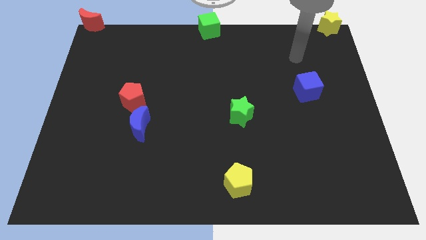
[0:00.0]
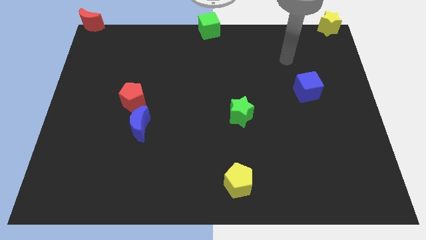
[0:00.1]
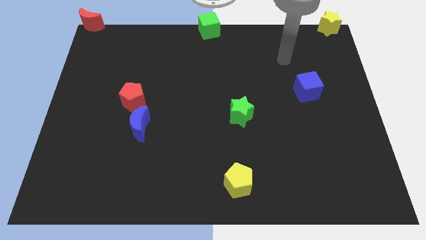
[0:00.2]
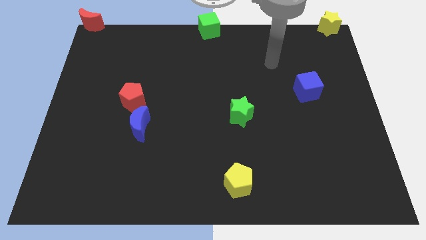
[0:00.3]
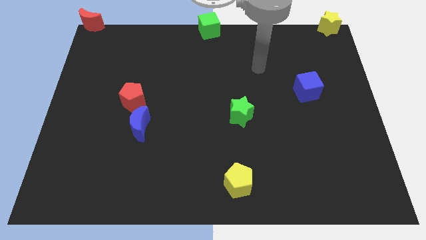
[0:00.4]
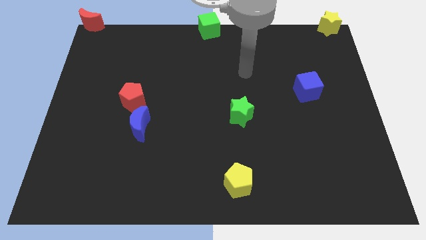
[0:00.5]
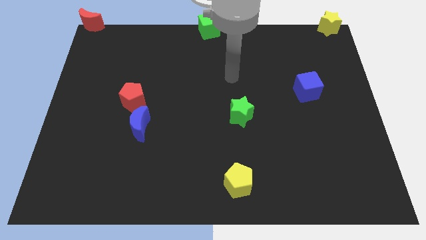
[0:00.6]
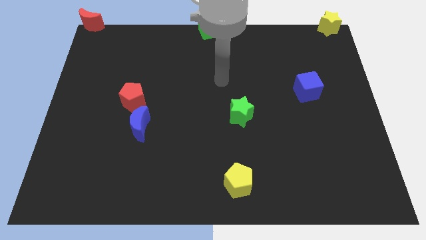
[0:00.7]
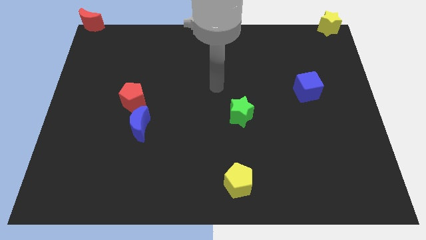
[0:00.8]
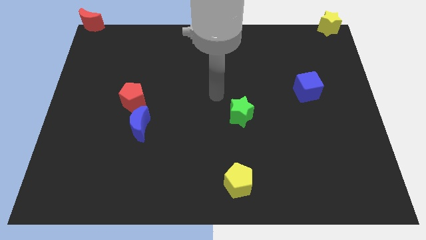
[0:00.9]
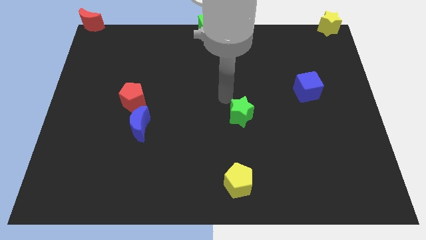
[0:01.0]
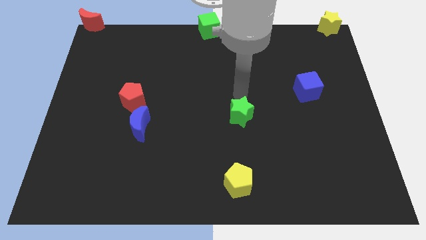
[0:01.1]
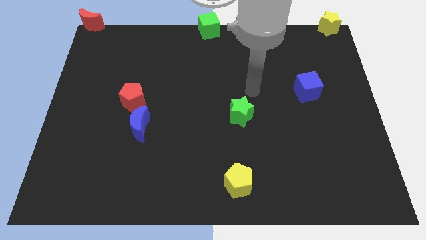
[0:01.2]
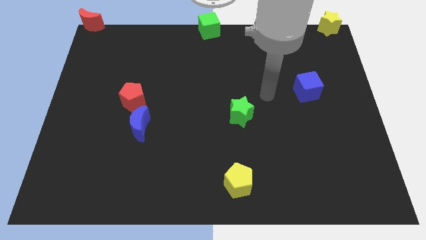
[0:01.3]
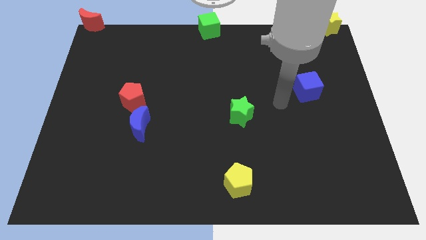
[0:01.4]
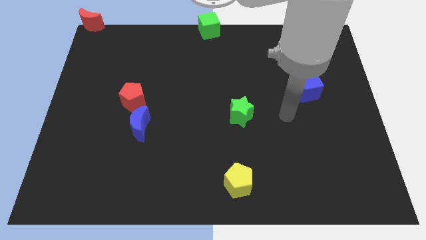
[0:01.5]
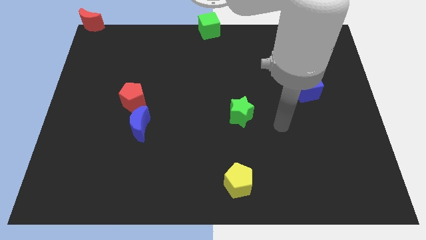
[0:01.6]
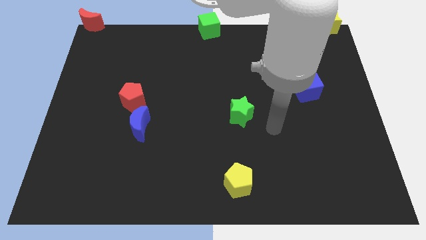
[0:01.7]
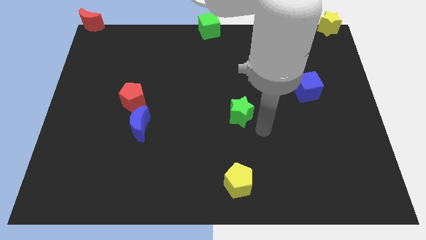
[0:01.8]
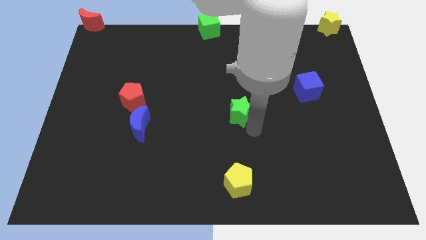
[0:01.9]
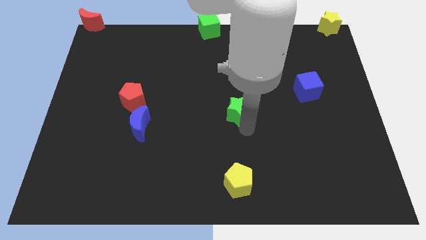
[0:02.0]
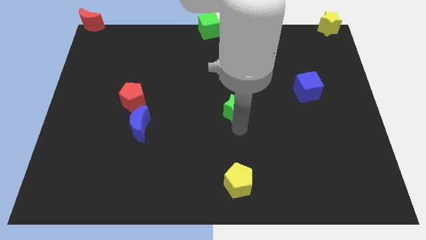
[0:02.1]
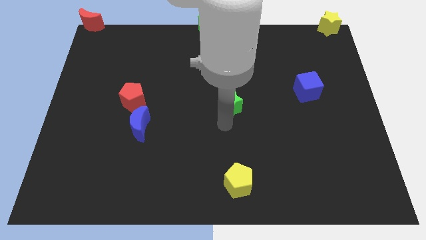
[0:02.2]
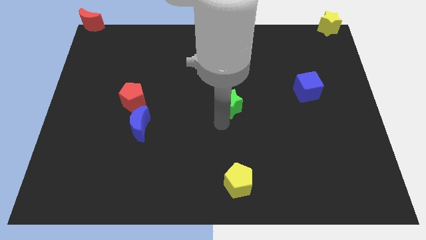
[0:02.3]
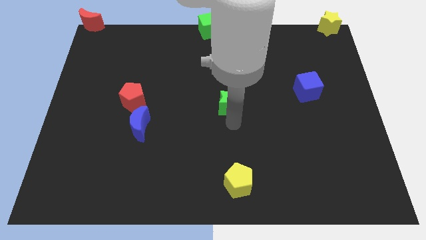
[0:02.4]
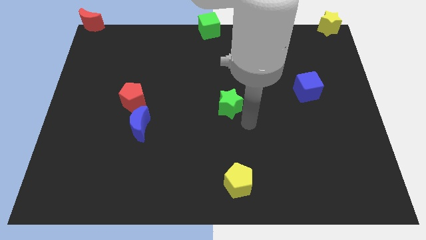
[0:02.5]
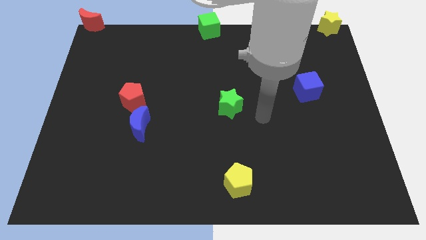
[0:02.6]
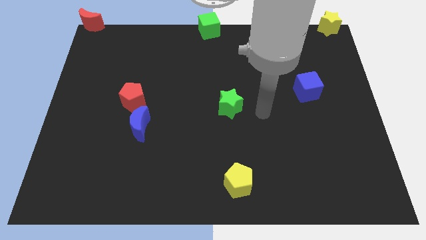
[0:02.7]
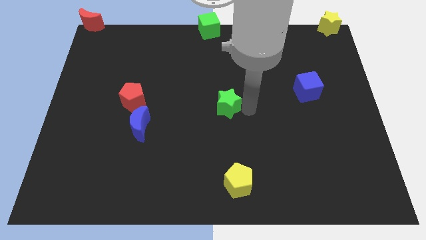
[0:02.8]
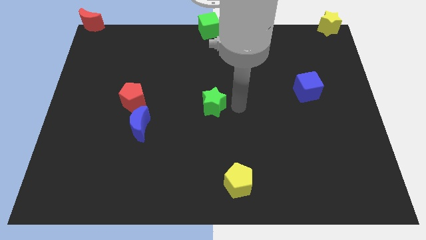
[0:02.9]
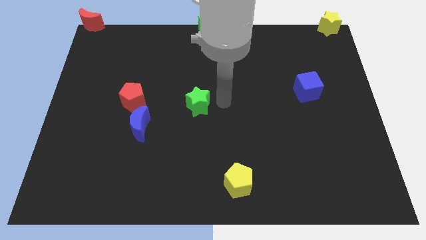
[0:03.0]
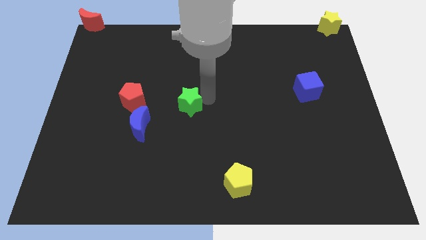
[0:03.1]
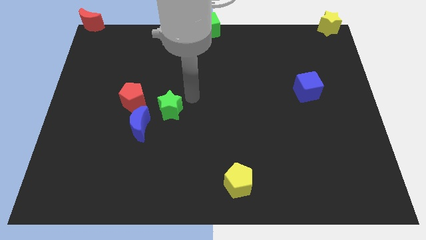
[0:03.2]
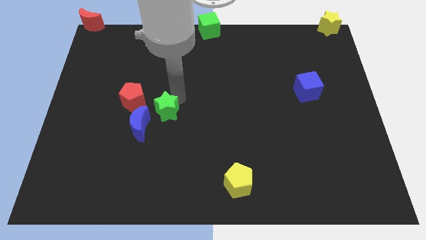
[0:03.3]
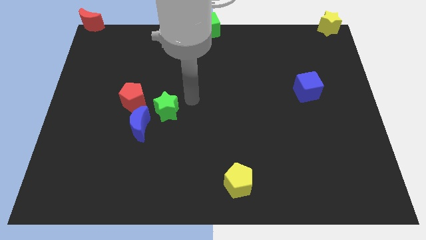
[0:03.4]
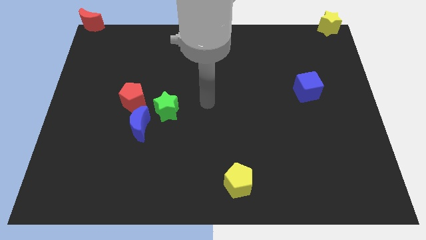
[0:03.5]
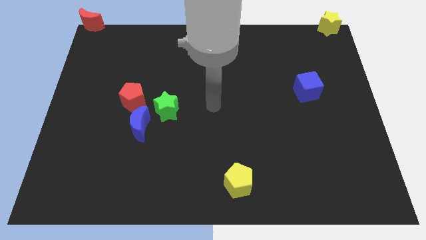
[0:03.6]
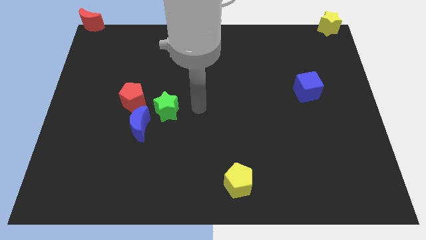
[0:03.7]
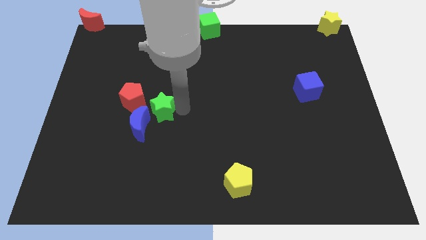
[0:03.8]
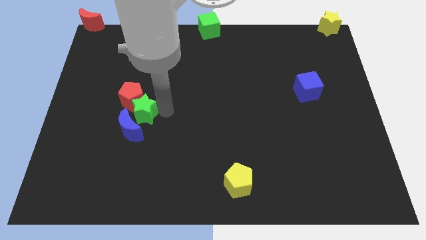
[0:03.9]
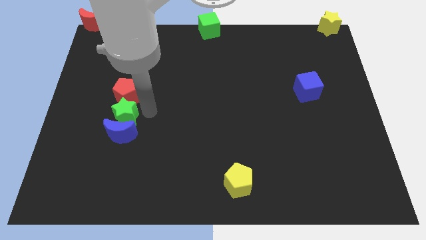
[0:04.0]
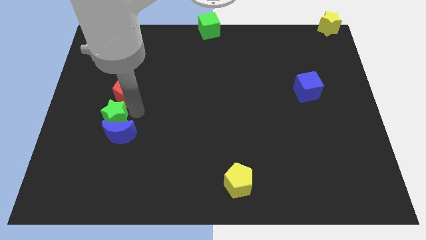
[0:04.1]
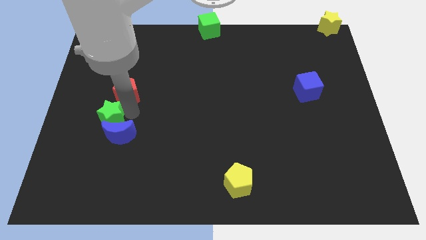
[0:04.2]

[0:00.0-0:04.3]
push the green star above to the blue crescent

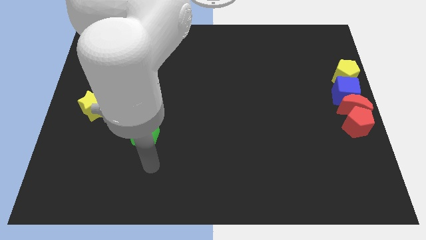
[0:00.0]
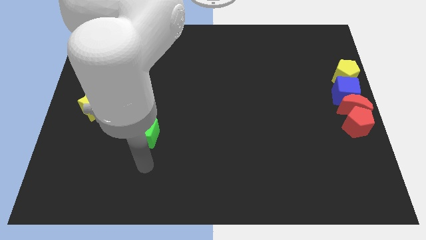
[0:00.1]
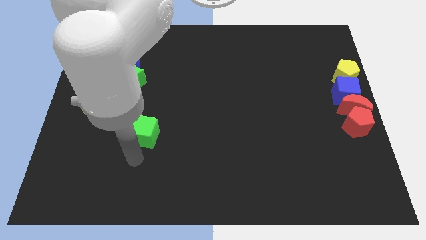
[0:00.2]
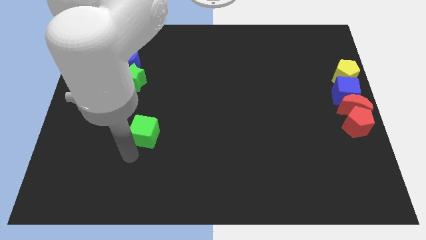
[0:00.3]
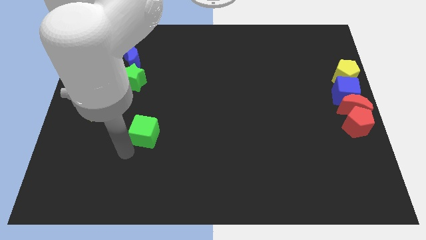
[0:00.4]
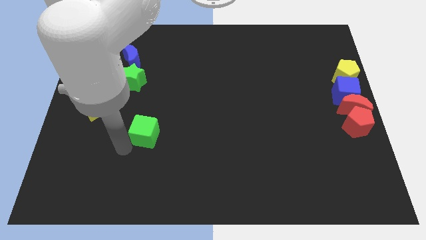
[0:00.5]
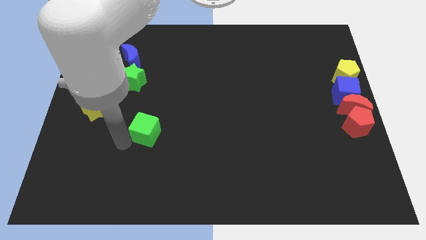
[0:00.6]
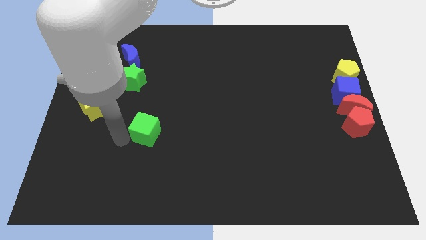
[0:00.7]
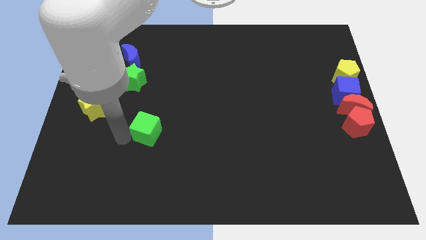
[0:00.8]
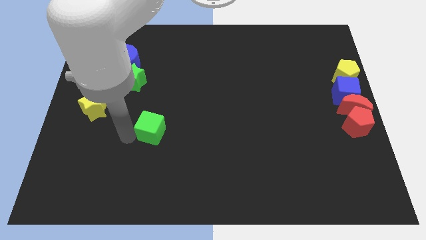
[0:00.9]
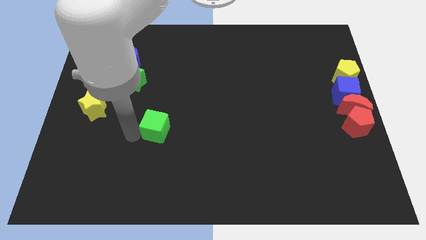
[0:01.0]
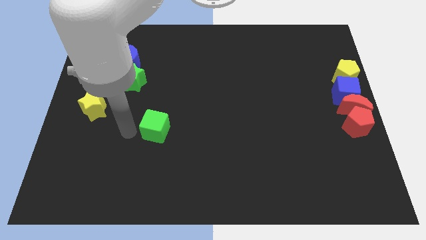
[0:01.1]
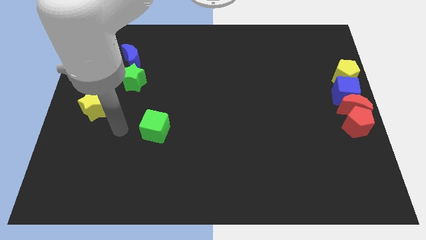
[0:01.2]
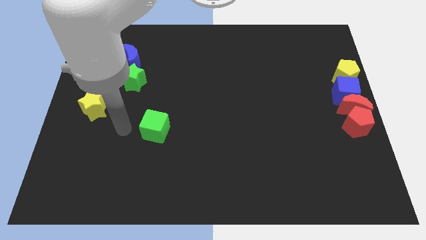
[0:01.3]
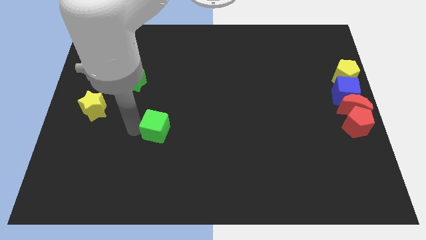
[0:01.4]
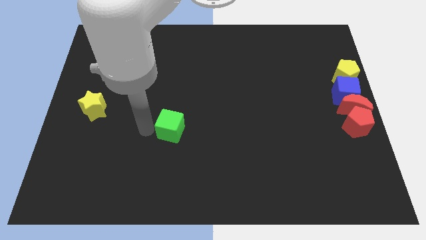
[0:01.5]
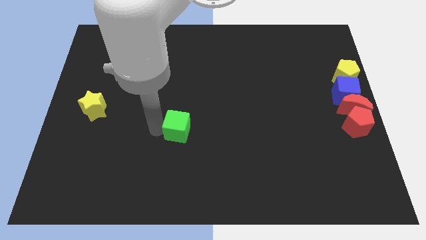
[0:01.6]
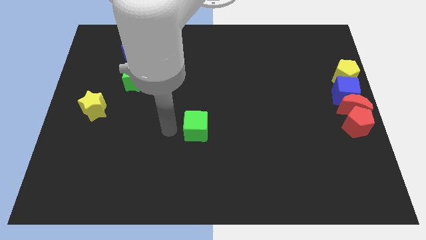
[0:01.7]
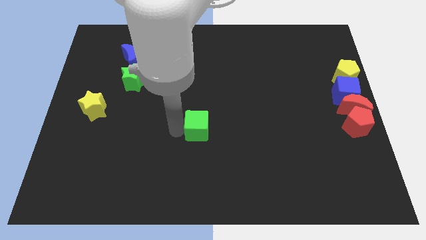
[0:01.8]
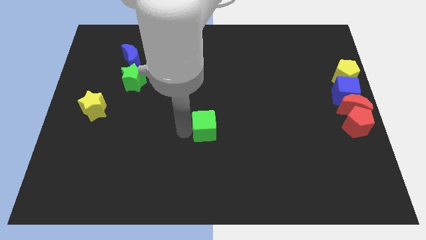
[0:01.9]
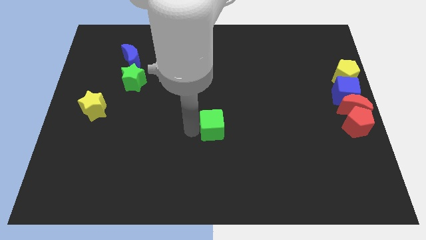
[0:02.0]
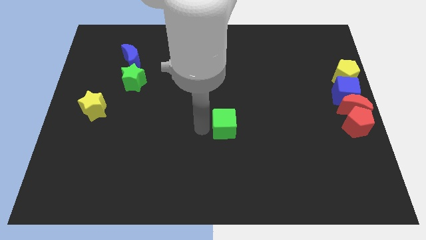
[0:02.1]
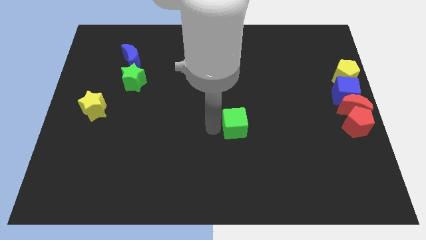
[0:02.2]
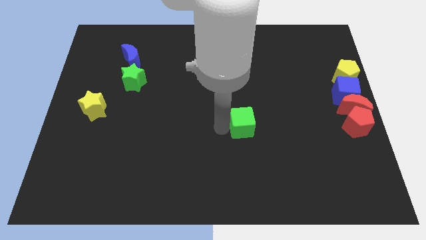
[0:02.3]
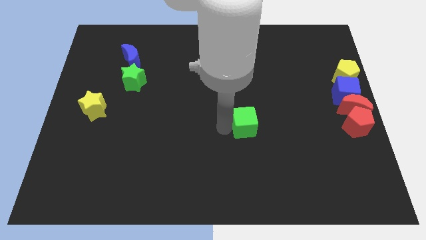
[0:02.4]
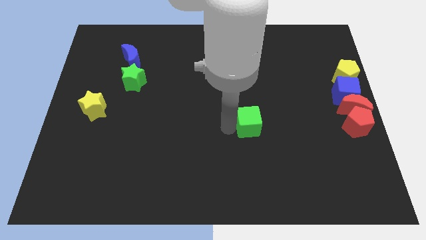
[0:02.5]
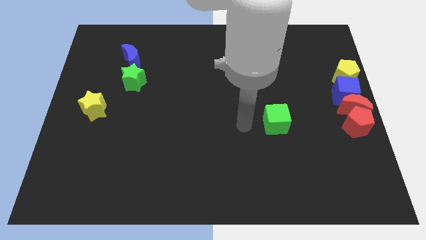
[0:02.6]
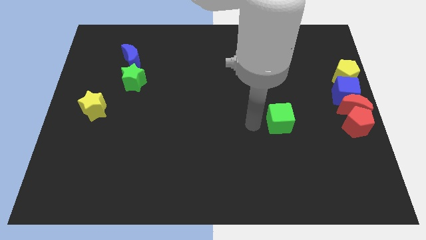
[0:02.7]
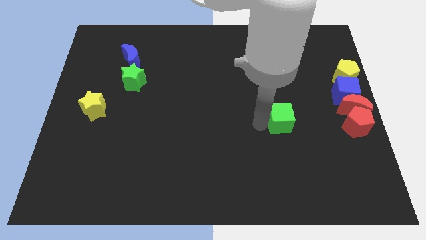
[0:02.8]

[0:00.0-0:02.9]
push green cube diagonal to the left of the red pentagon

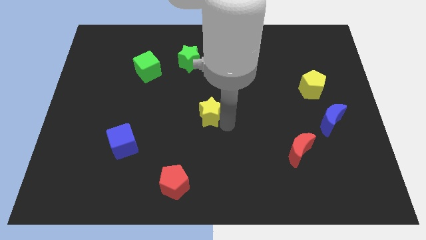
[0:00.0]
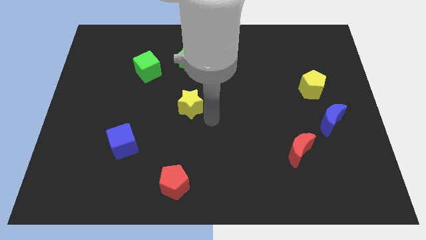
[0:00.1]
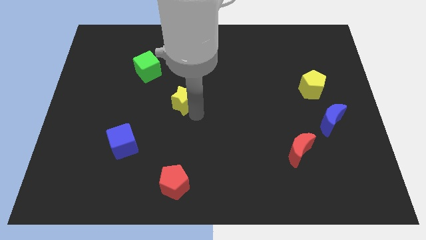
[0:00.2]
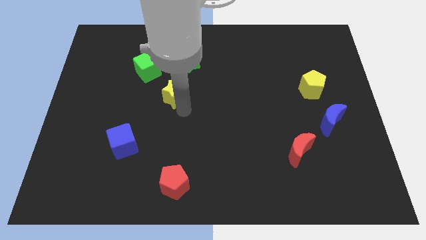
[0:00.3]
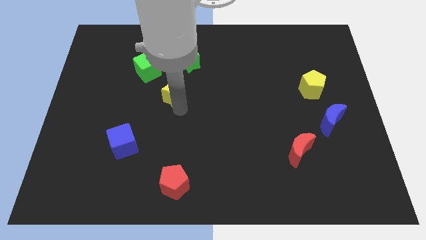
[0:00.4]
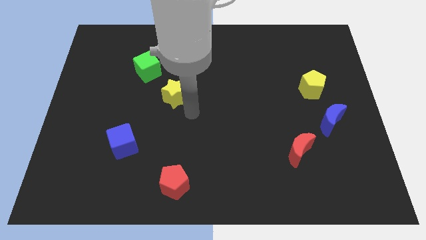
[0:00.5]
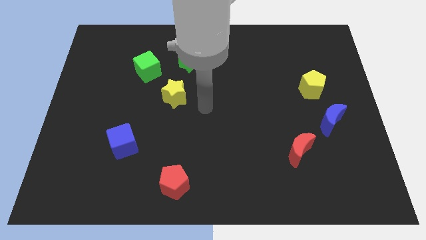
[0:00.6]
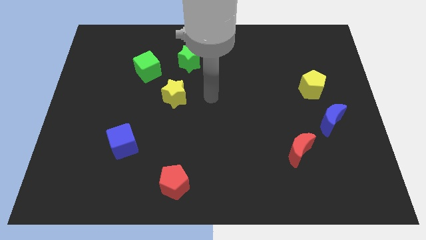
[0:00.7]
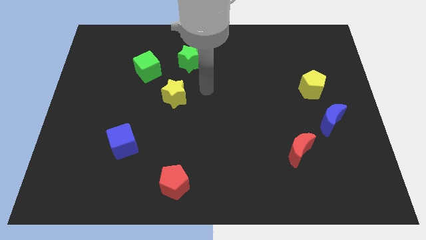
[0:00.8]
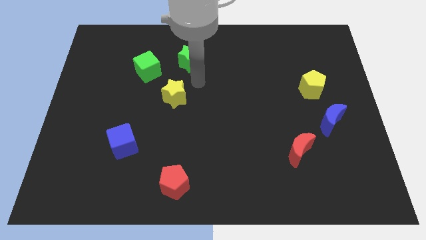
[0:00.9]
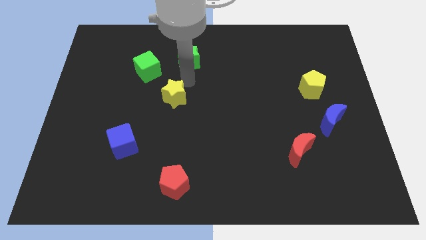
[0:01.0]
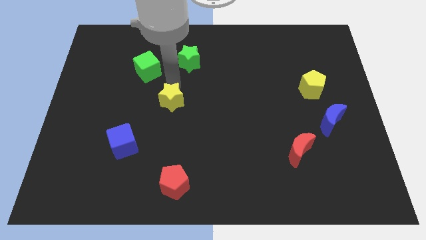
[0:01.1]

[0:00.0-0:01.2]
move the yellow star above the red pentagon

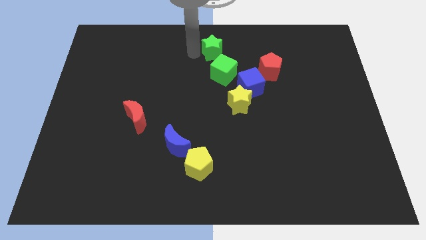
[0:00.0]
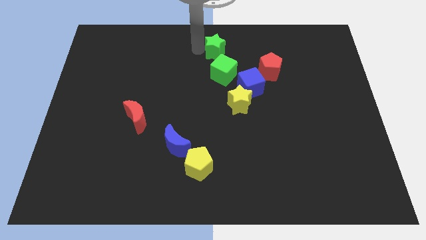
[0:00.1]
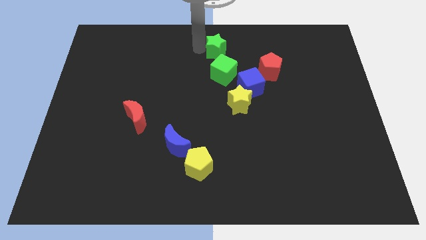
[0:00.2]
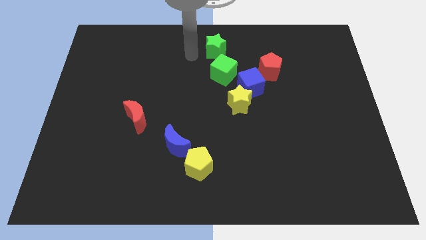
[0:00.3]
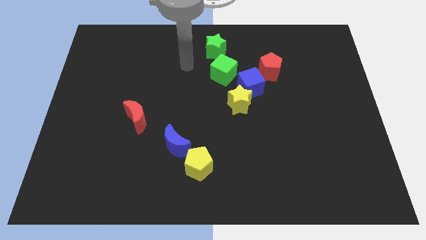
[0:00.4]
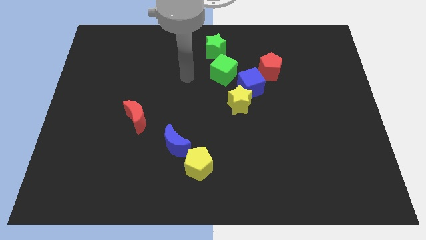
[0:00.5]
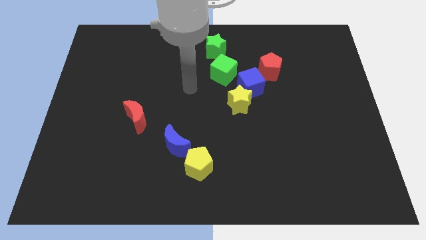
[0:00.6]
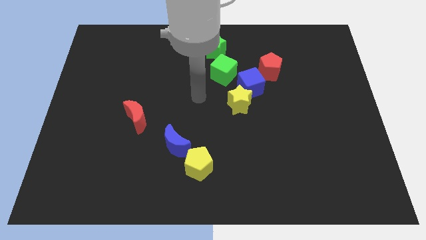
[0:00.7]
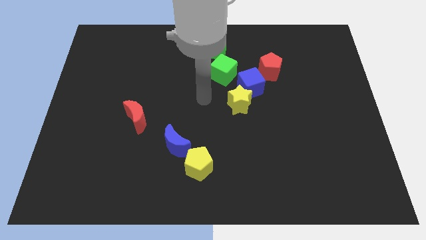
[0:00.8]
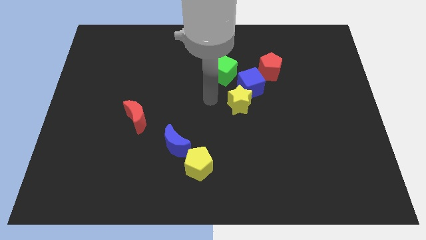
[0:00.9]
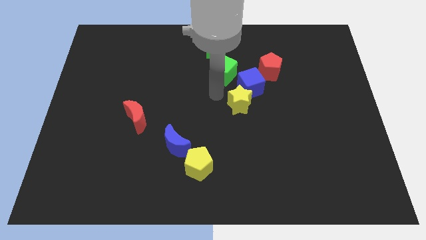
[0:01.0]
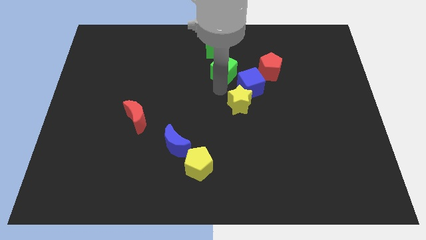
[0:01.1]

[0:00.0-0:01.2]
move your arm away from the green star towards the bottom
